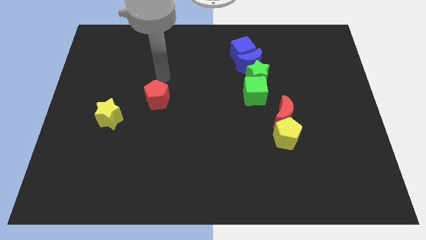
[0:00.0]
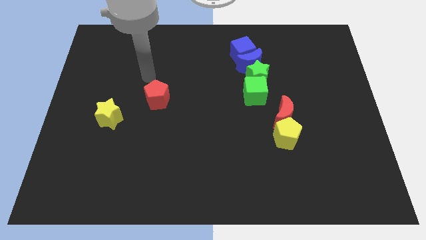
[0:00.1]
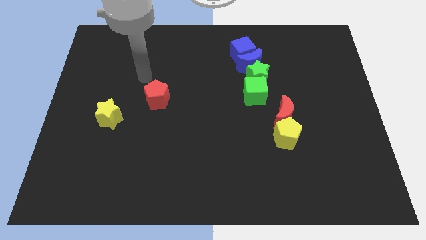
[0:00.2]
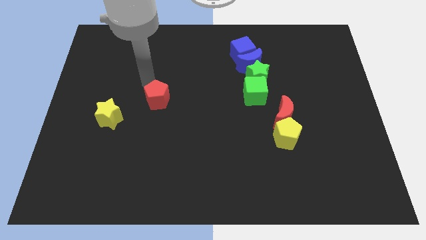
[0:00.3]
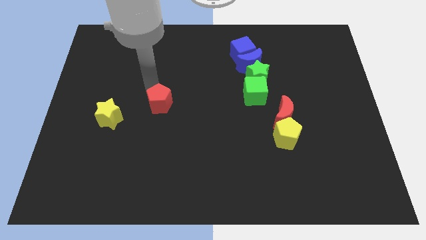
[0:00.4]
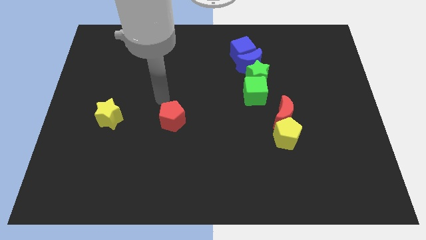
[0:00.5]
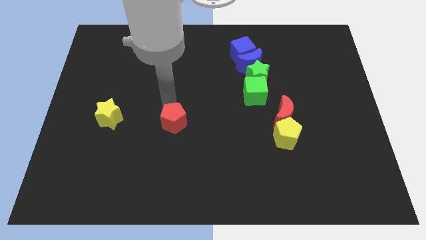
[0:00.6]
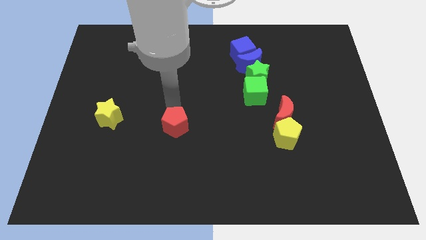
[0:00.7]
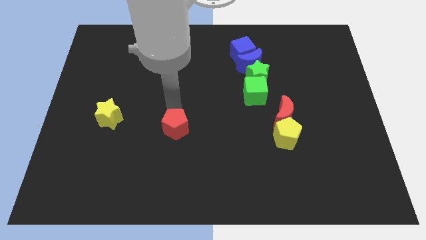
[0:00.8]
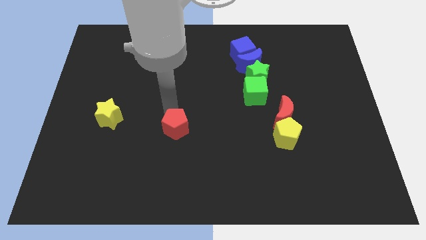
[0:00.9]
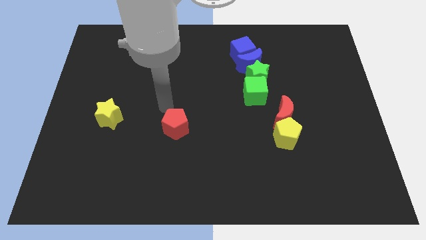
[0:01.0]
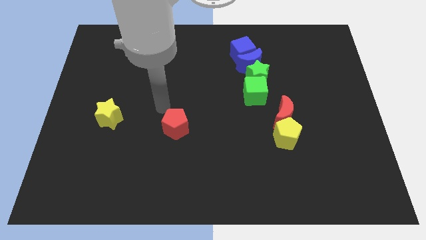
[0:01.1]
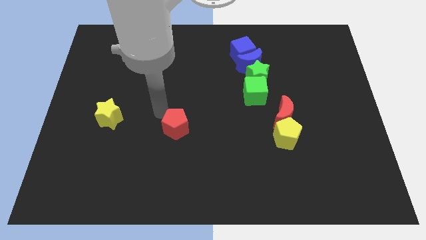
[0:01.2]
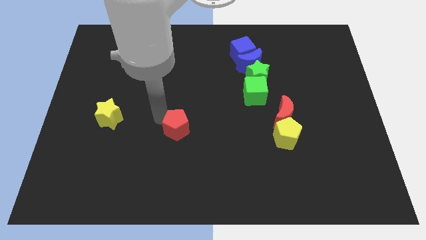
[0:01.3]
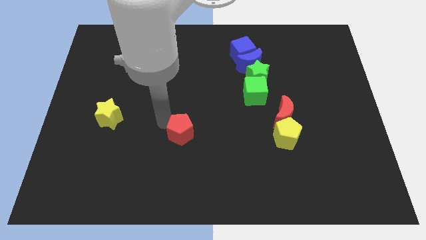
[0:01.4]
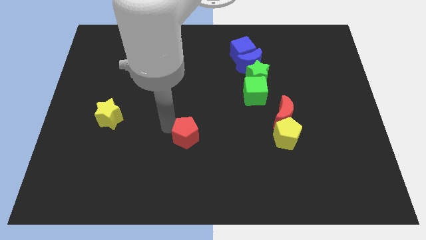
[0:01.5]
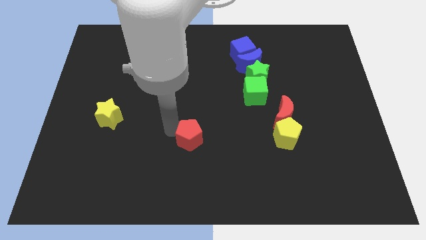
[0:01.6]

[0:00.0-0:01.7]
place the red pentagon diagonally bottom left to the green cube

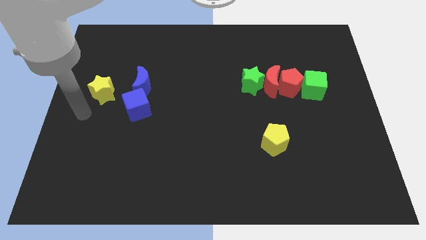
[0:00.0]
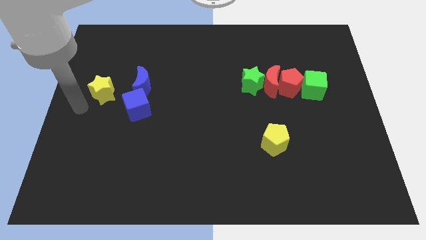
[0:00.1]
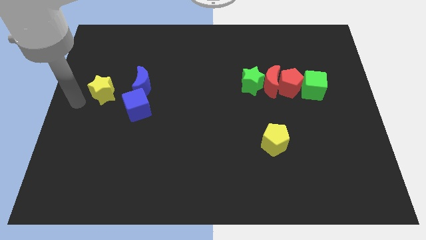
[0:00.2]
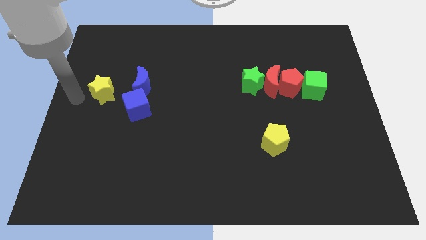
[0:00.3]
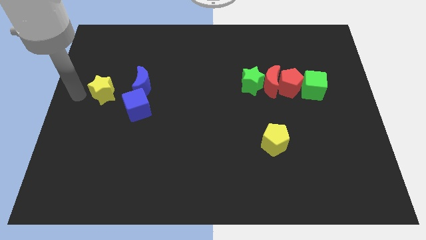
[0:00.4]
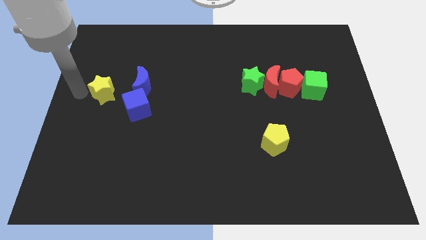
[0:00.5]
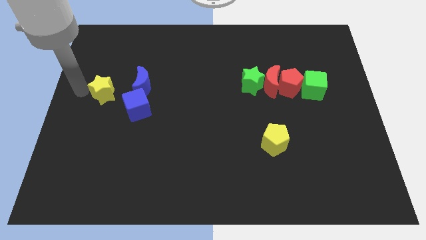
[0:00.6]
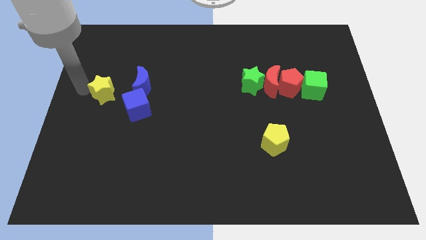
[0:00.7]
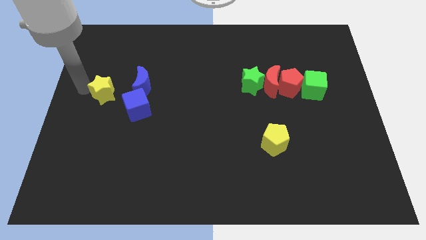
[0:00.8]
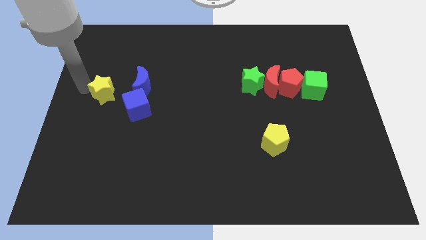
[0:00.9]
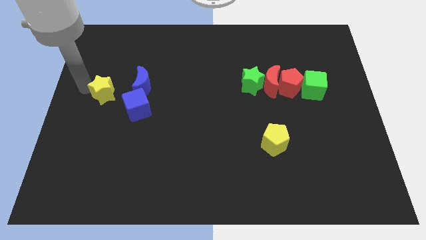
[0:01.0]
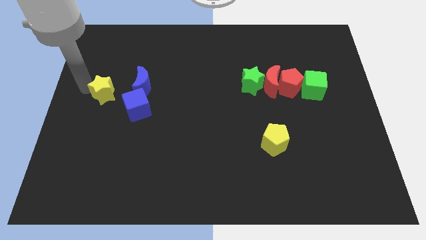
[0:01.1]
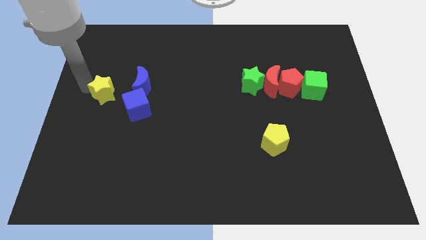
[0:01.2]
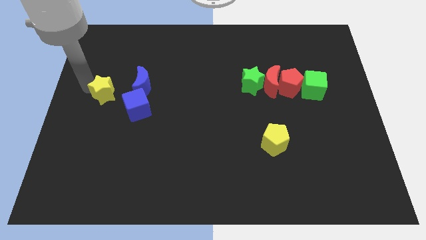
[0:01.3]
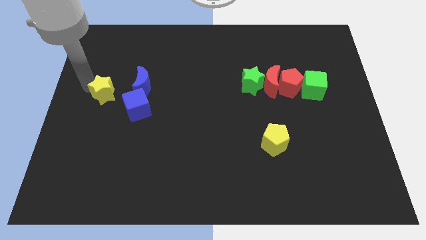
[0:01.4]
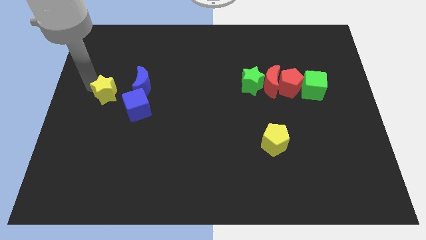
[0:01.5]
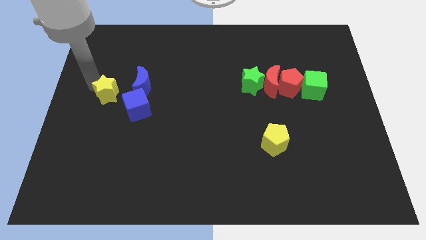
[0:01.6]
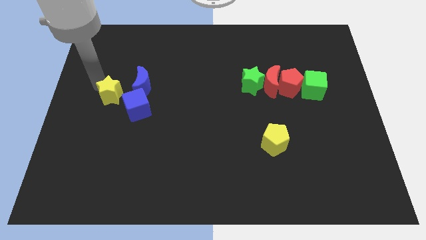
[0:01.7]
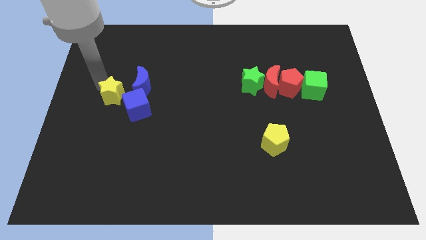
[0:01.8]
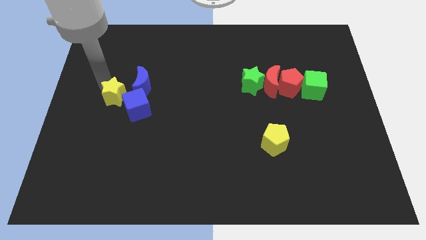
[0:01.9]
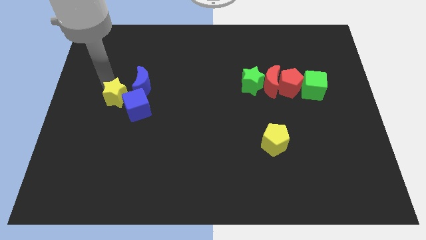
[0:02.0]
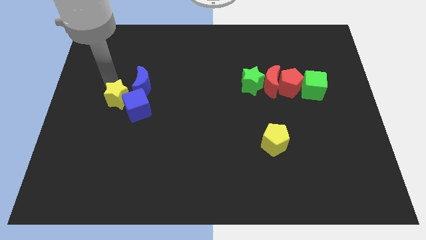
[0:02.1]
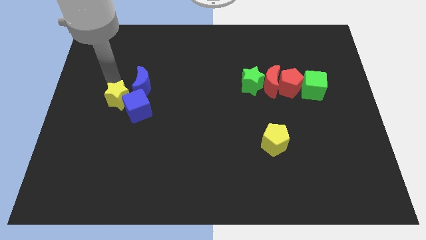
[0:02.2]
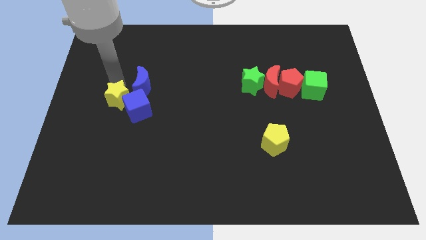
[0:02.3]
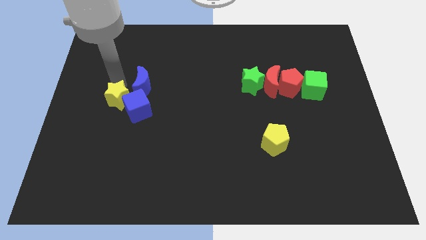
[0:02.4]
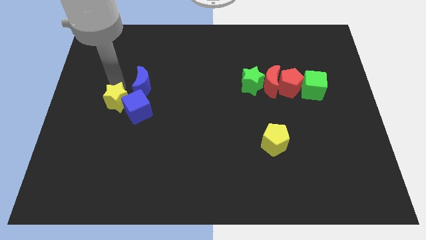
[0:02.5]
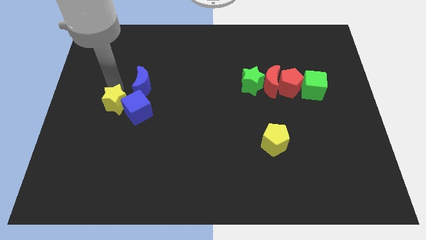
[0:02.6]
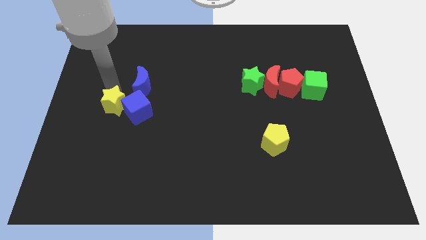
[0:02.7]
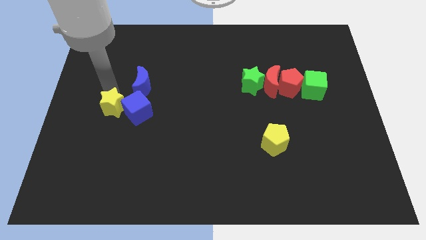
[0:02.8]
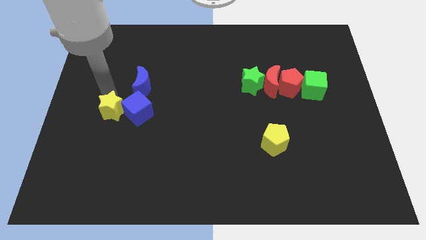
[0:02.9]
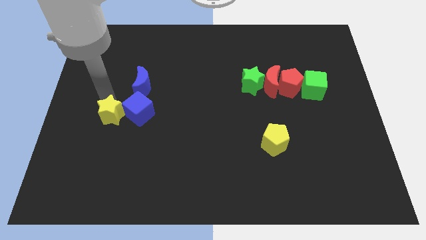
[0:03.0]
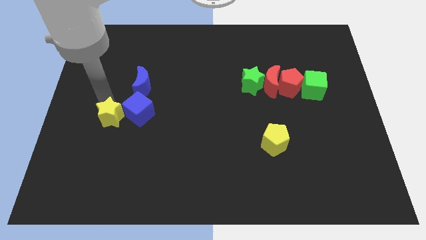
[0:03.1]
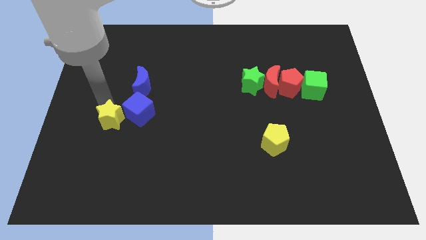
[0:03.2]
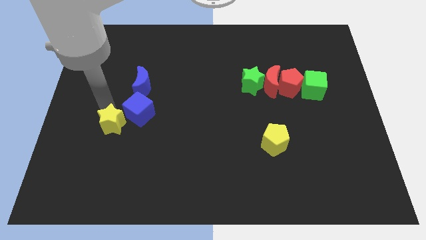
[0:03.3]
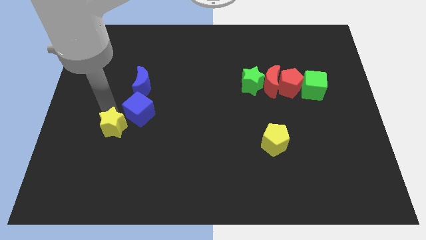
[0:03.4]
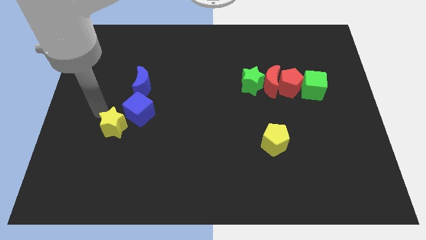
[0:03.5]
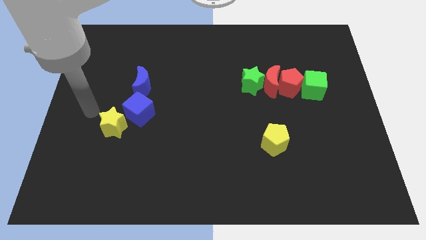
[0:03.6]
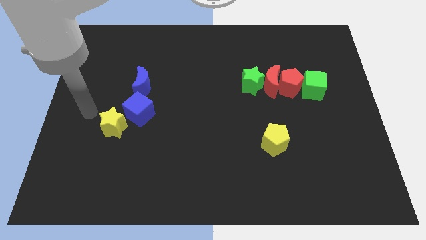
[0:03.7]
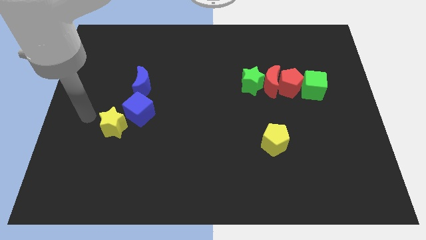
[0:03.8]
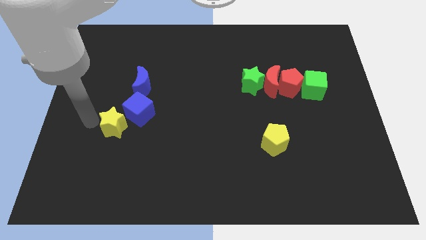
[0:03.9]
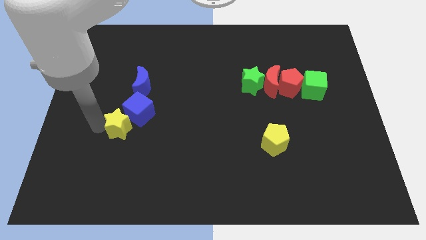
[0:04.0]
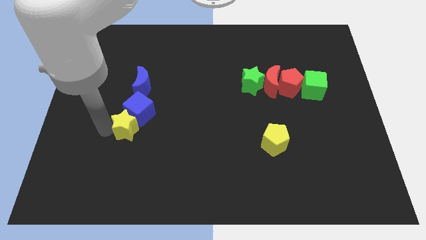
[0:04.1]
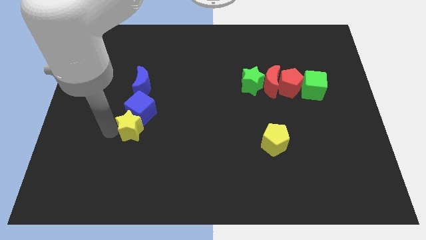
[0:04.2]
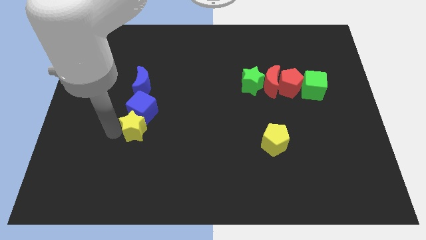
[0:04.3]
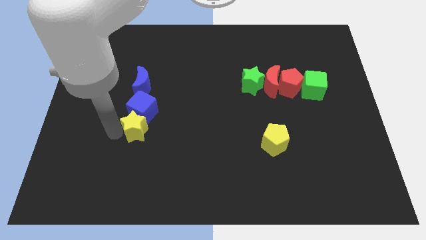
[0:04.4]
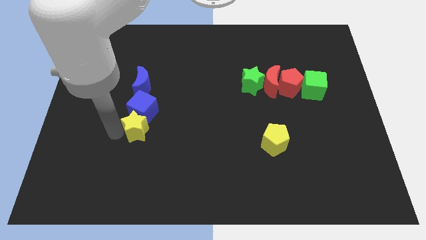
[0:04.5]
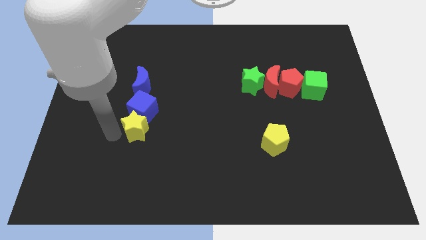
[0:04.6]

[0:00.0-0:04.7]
move yellow star into the blue cube

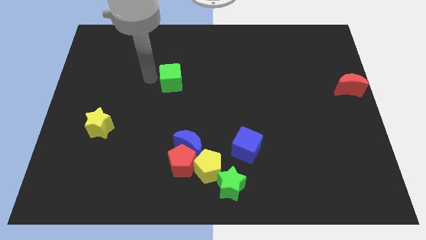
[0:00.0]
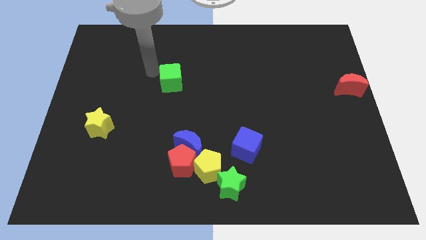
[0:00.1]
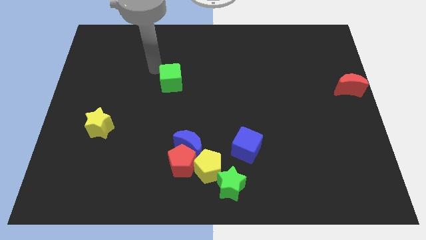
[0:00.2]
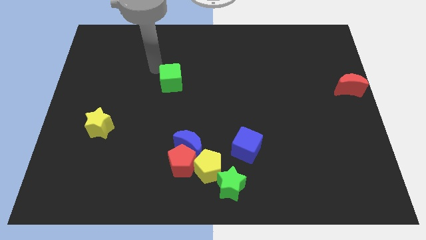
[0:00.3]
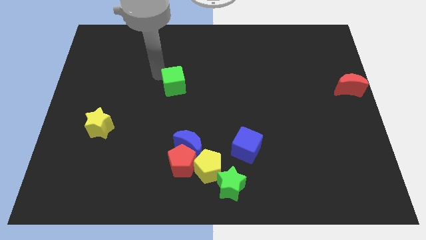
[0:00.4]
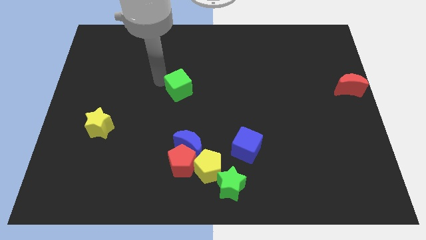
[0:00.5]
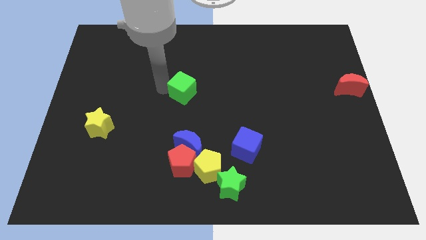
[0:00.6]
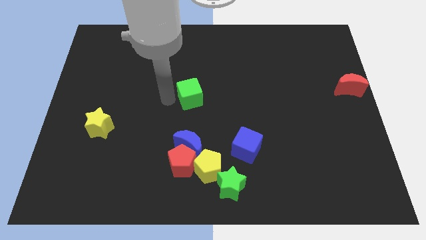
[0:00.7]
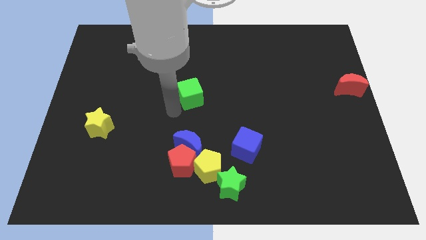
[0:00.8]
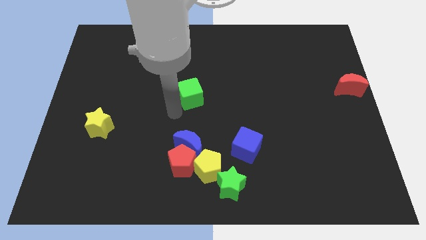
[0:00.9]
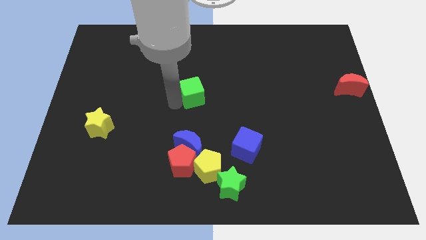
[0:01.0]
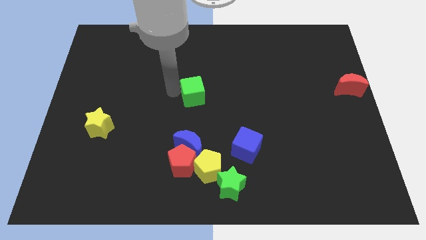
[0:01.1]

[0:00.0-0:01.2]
place the green cube above te blue moon

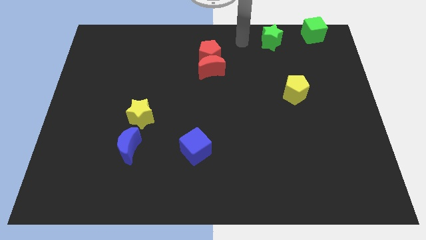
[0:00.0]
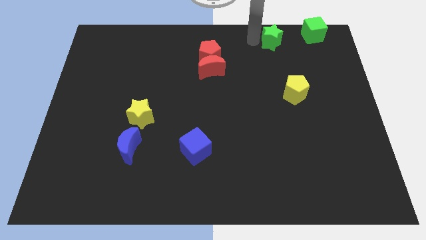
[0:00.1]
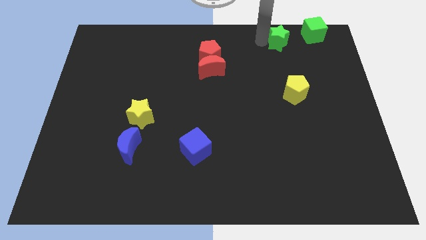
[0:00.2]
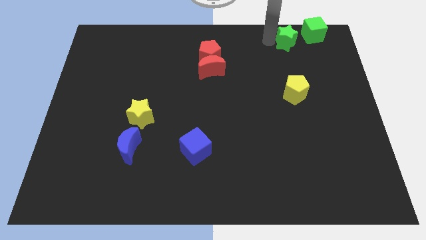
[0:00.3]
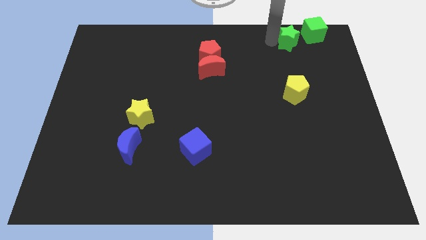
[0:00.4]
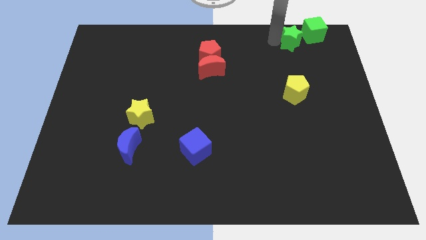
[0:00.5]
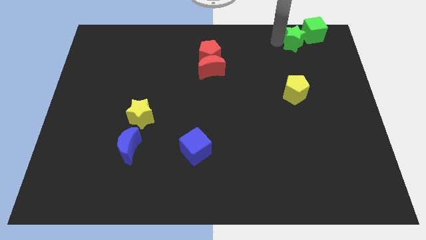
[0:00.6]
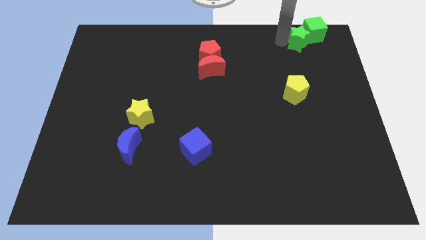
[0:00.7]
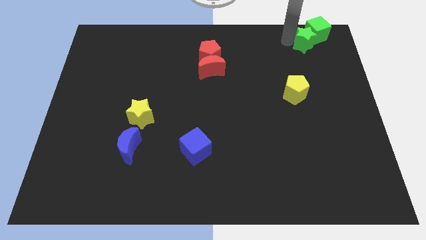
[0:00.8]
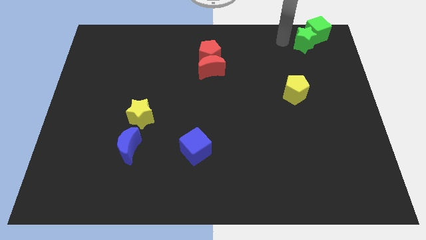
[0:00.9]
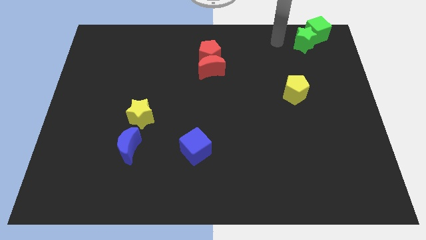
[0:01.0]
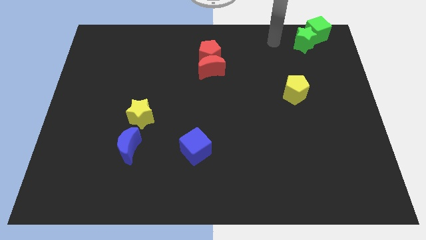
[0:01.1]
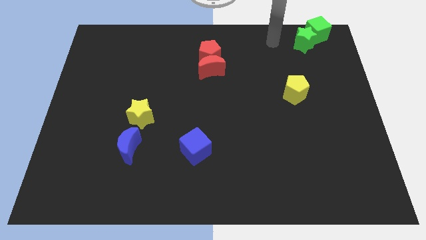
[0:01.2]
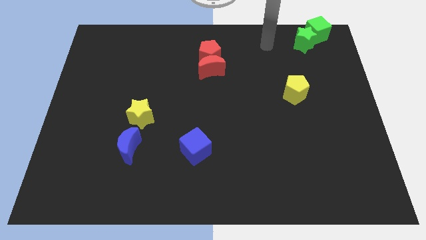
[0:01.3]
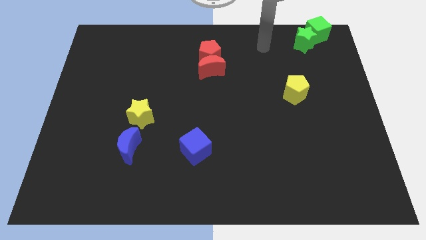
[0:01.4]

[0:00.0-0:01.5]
slide the green star into the green cube
